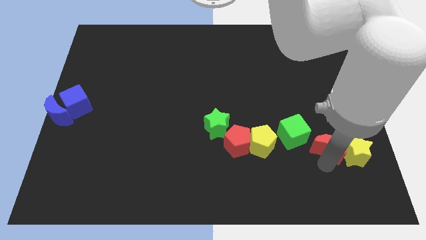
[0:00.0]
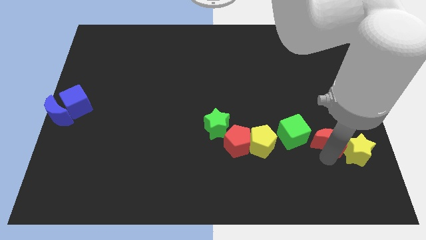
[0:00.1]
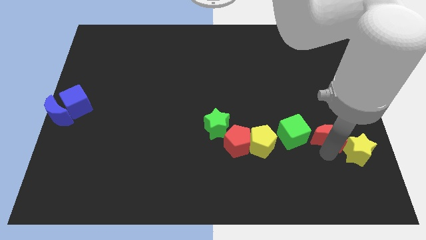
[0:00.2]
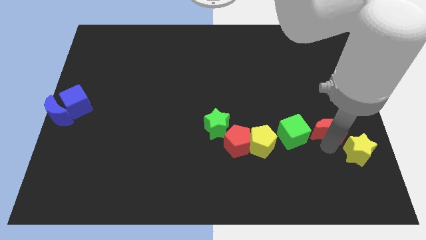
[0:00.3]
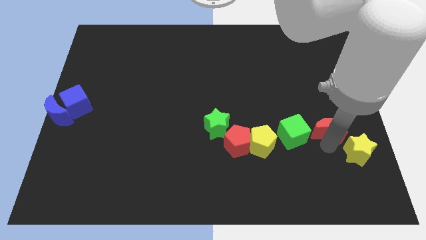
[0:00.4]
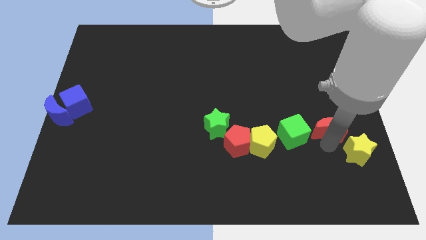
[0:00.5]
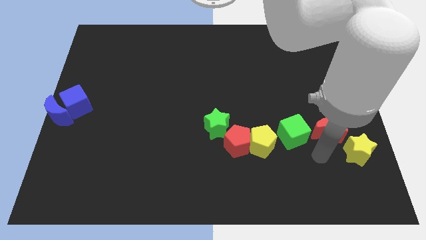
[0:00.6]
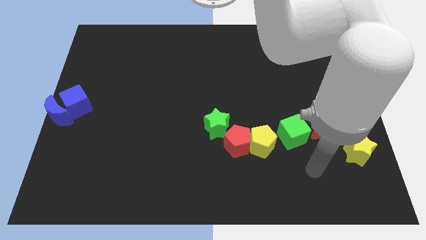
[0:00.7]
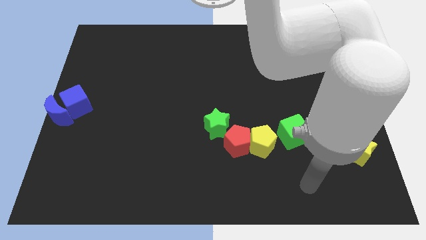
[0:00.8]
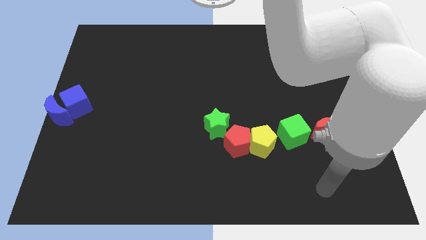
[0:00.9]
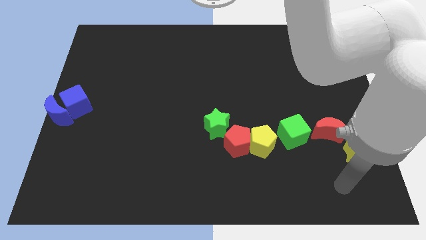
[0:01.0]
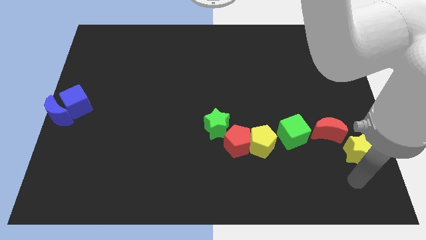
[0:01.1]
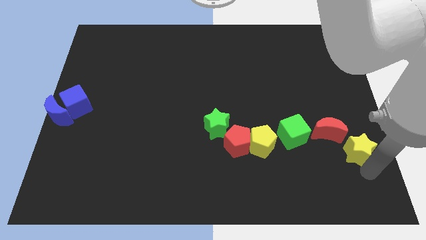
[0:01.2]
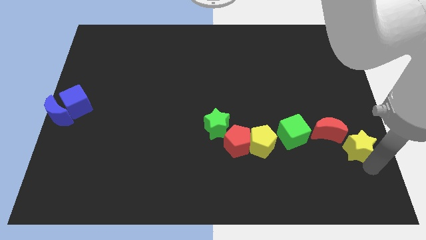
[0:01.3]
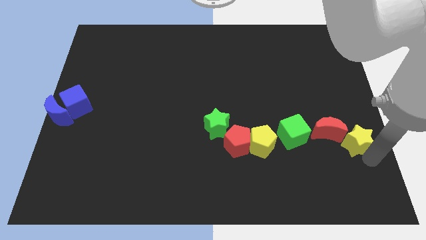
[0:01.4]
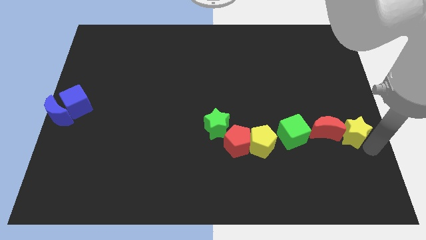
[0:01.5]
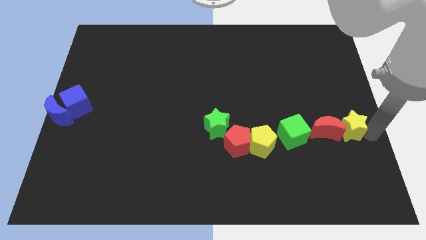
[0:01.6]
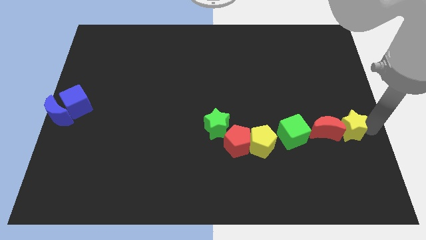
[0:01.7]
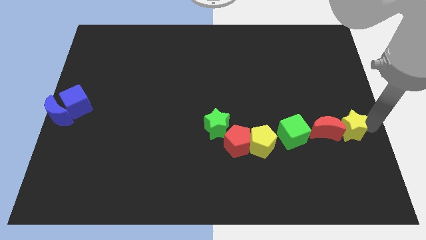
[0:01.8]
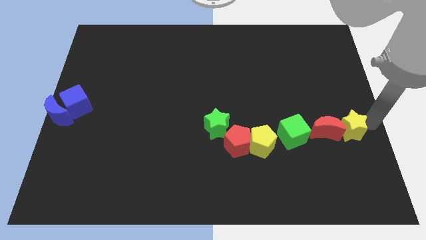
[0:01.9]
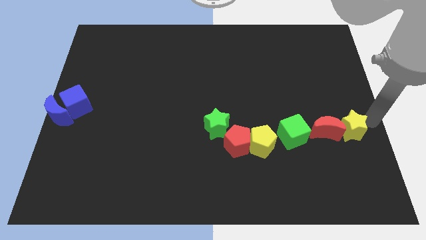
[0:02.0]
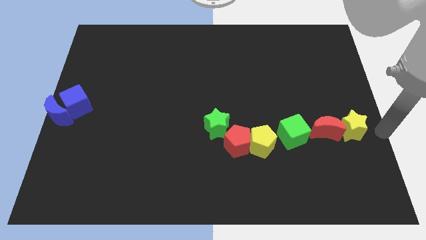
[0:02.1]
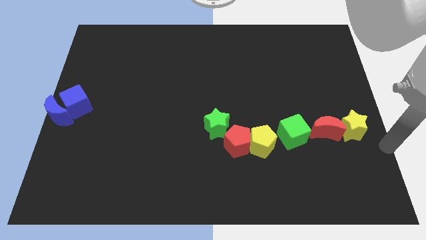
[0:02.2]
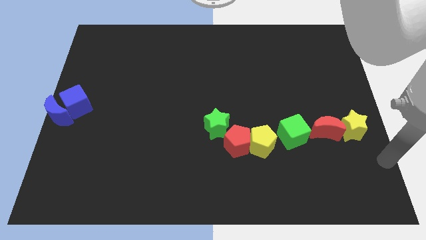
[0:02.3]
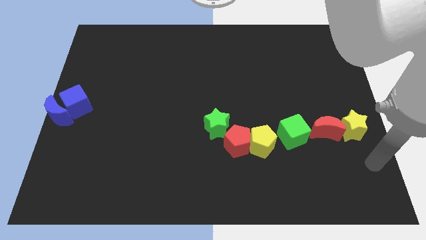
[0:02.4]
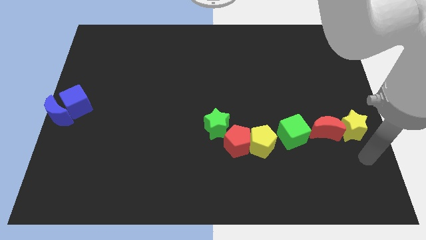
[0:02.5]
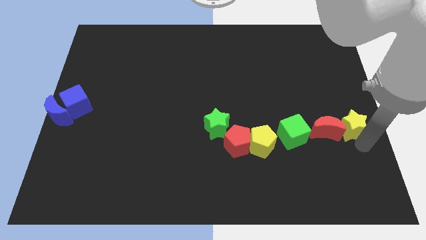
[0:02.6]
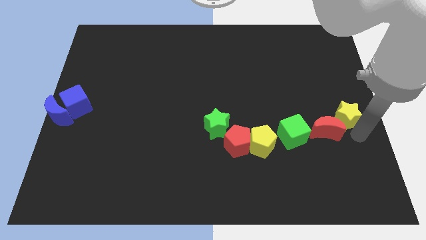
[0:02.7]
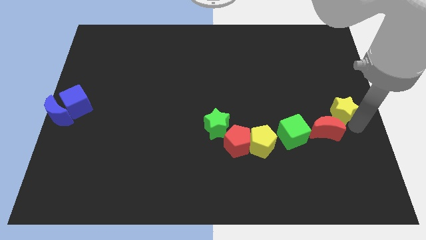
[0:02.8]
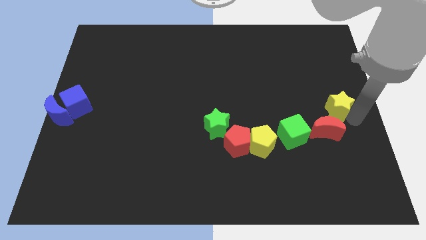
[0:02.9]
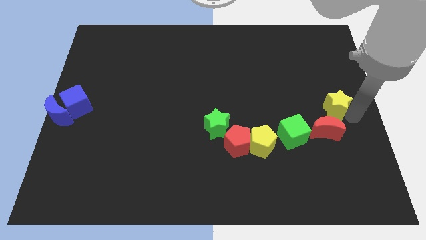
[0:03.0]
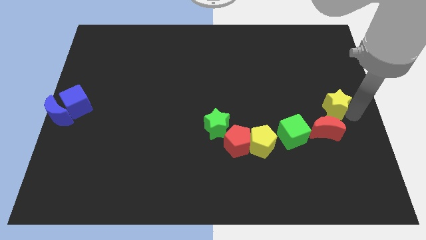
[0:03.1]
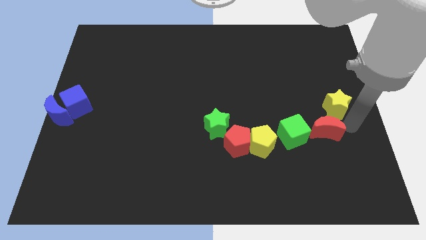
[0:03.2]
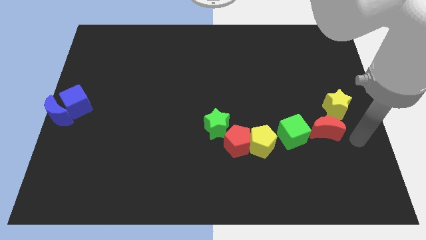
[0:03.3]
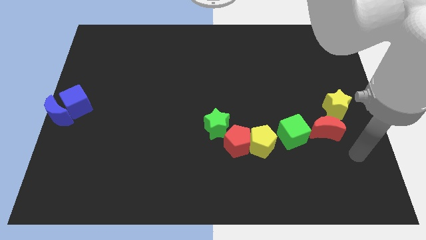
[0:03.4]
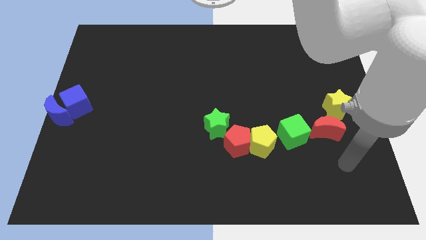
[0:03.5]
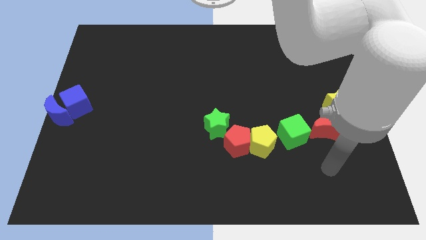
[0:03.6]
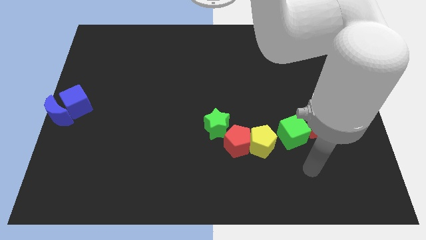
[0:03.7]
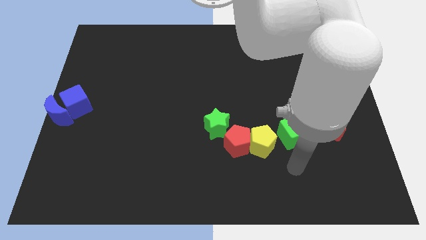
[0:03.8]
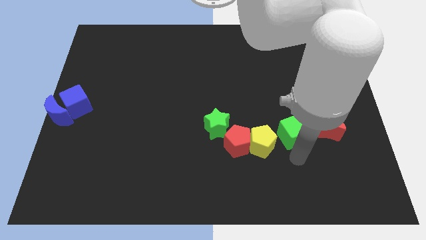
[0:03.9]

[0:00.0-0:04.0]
place the yellow star above the red moon

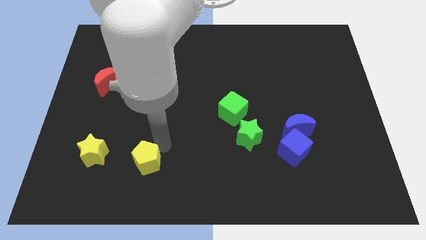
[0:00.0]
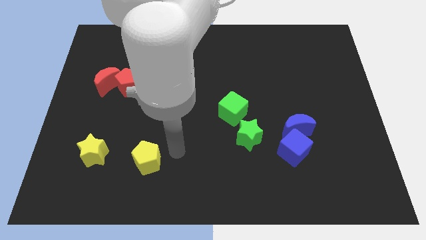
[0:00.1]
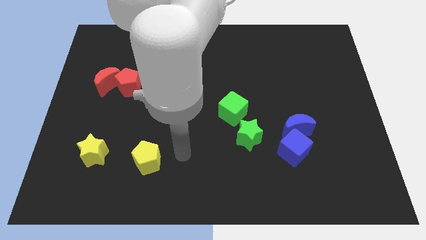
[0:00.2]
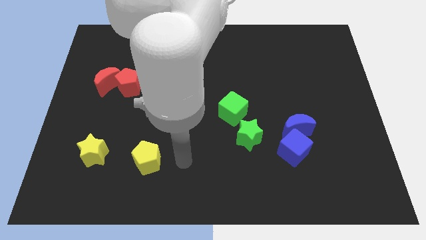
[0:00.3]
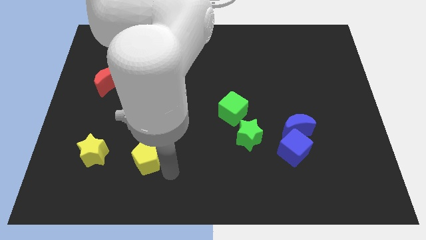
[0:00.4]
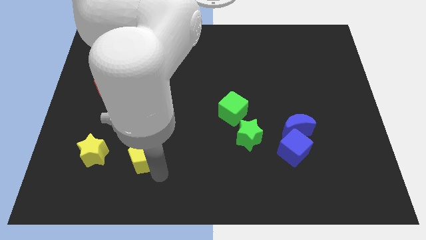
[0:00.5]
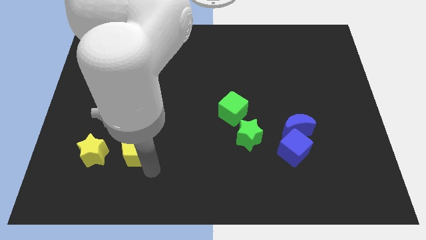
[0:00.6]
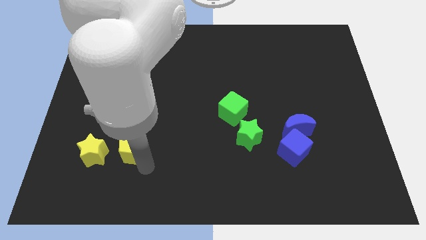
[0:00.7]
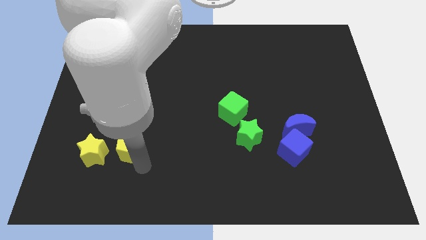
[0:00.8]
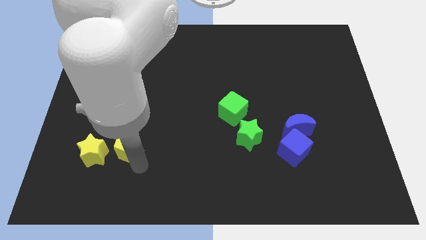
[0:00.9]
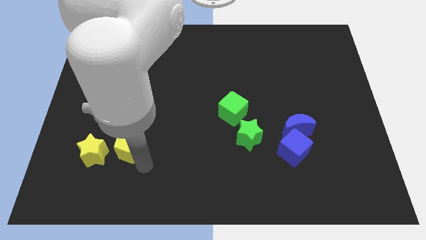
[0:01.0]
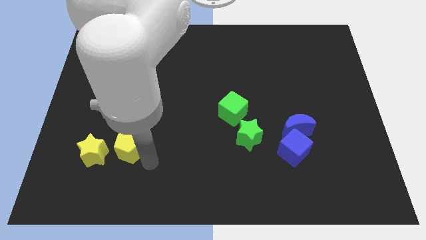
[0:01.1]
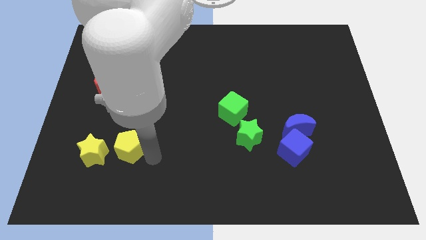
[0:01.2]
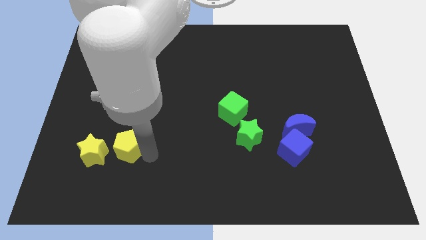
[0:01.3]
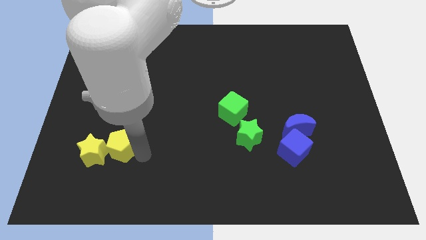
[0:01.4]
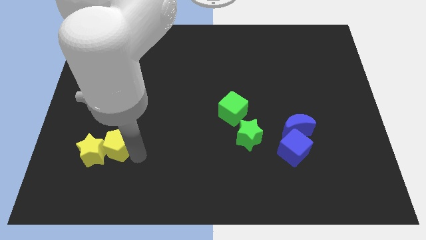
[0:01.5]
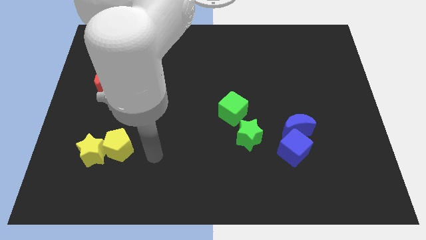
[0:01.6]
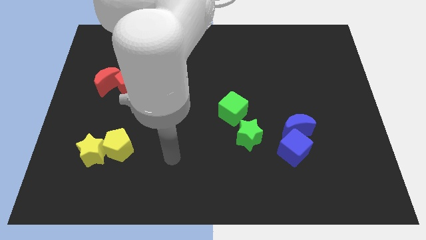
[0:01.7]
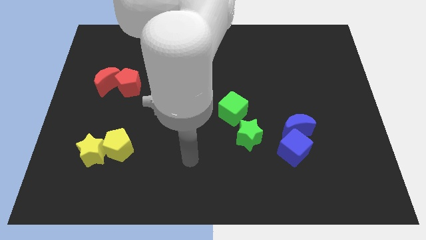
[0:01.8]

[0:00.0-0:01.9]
move the yellow pentagon into the yellow star

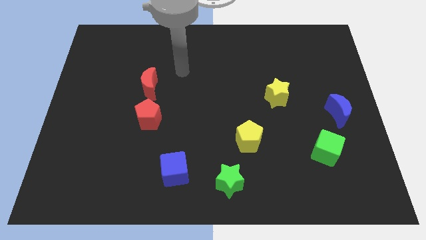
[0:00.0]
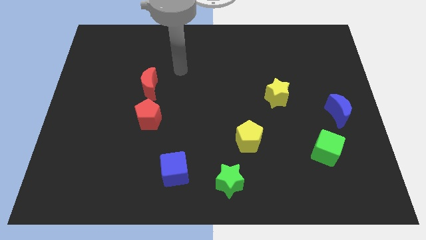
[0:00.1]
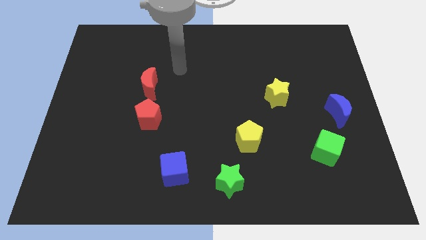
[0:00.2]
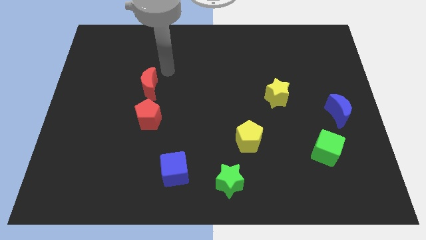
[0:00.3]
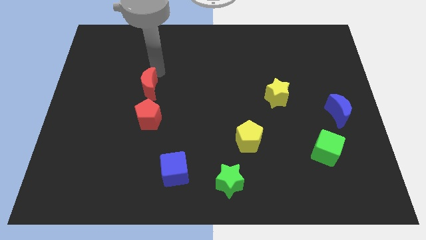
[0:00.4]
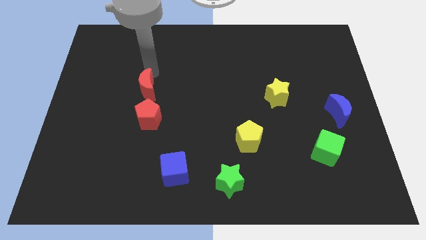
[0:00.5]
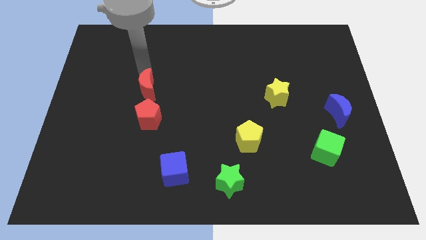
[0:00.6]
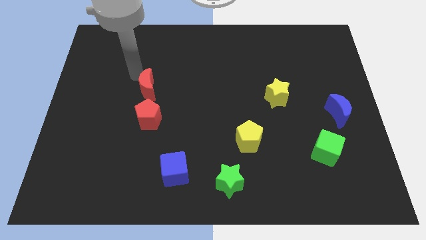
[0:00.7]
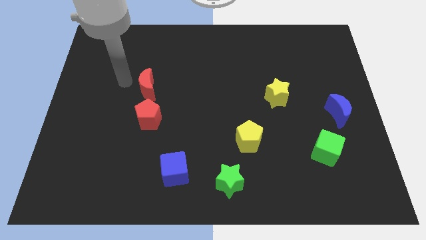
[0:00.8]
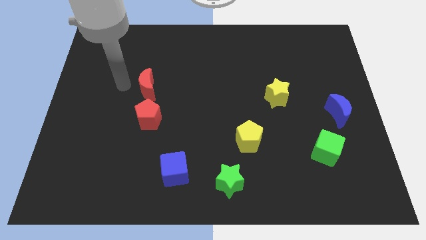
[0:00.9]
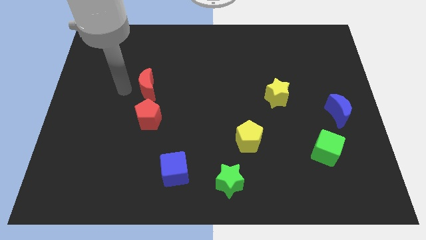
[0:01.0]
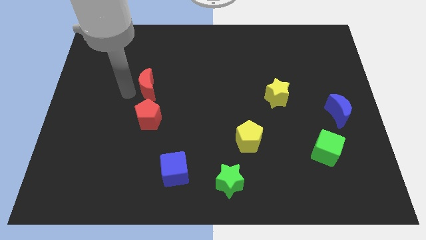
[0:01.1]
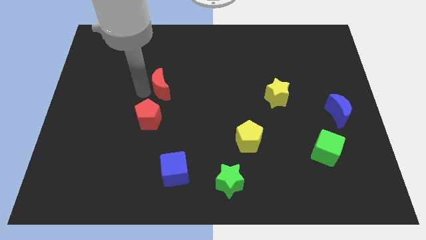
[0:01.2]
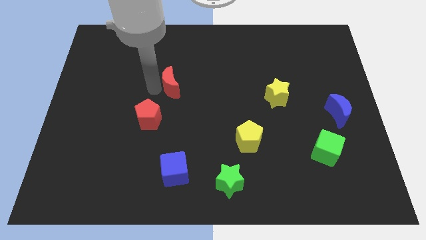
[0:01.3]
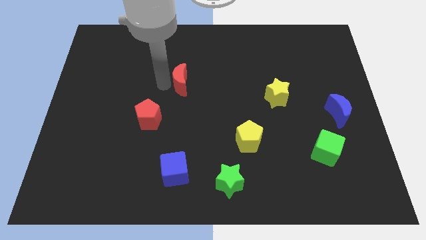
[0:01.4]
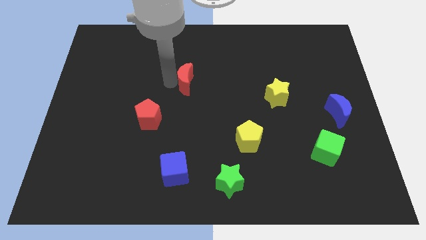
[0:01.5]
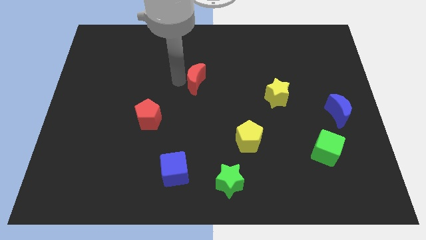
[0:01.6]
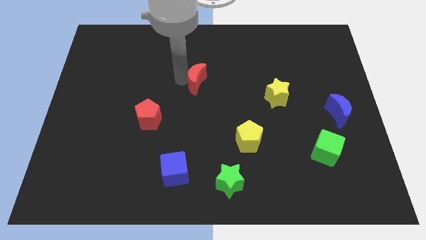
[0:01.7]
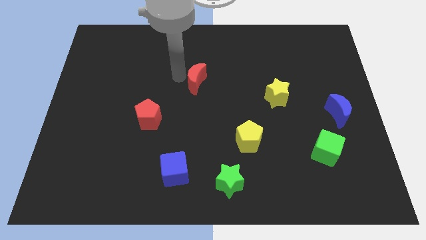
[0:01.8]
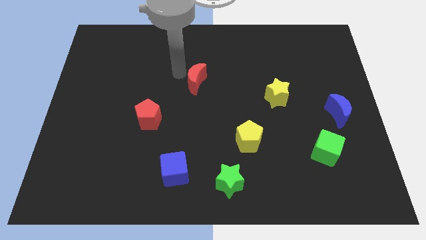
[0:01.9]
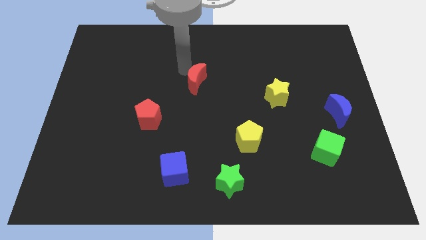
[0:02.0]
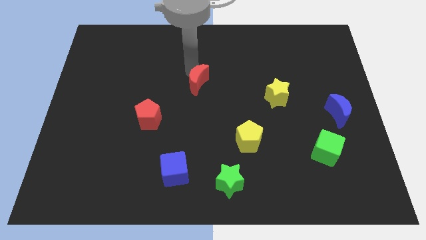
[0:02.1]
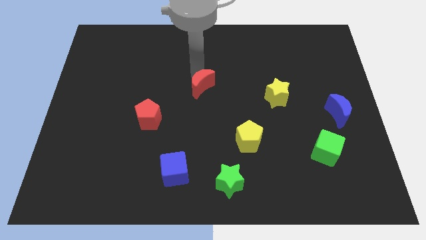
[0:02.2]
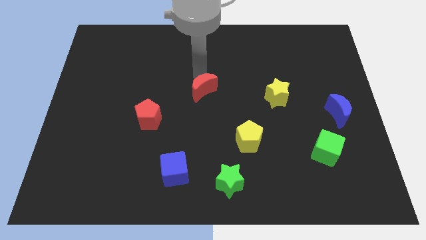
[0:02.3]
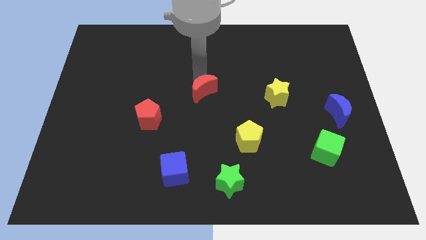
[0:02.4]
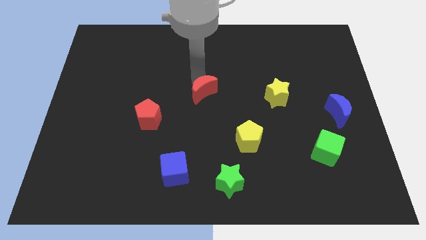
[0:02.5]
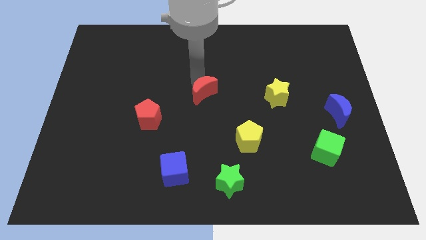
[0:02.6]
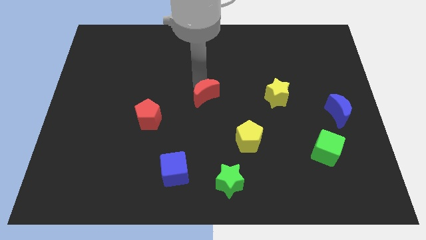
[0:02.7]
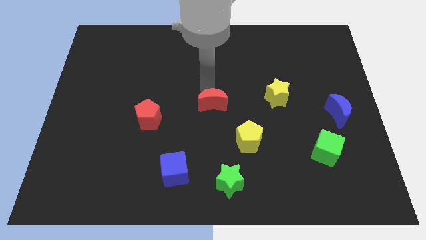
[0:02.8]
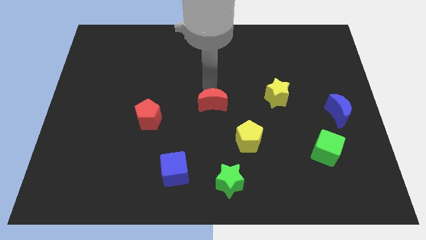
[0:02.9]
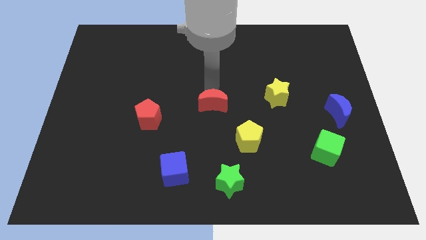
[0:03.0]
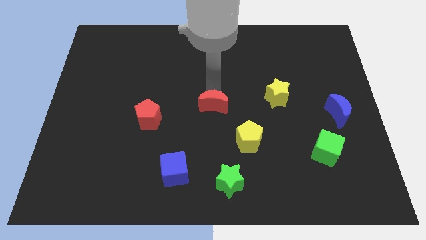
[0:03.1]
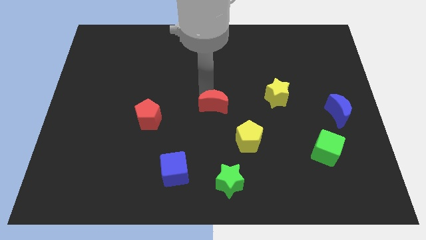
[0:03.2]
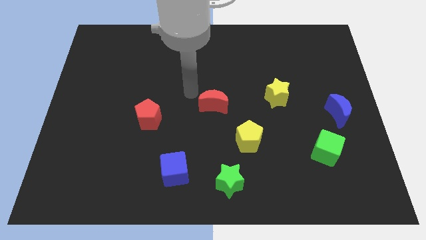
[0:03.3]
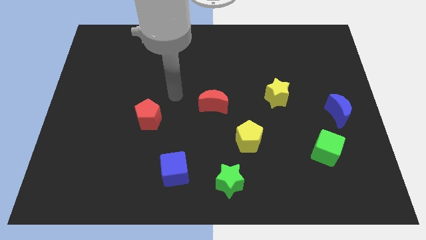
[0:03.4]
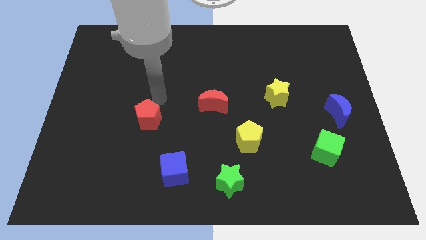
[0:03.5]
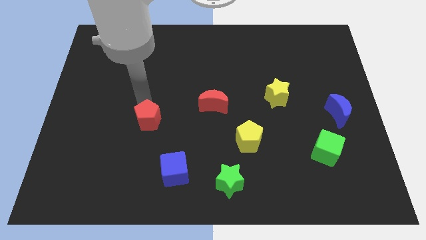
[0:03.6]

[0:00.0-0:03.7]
push the red moon to the center
